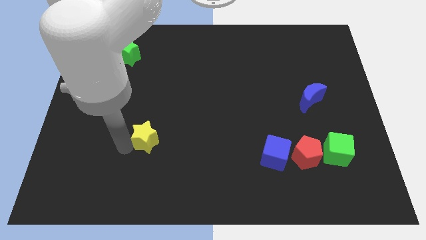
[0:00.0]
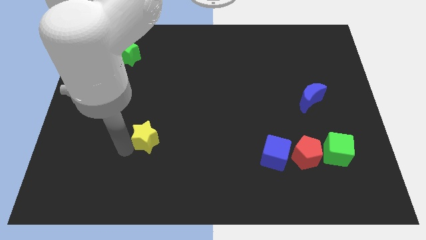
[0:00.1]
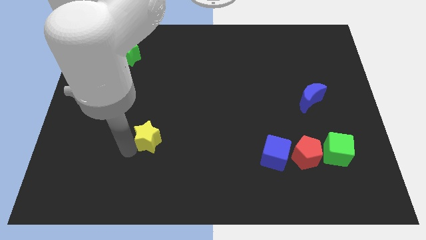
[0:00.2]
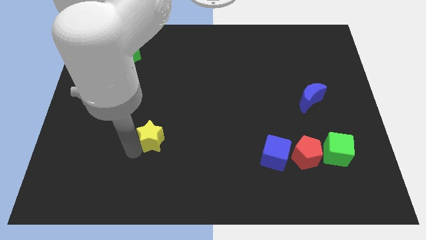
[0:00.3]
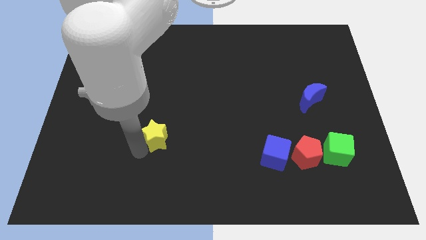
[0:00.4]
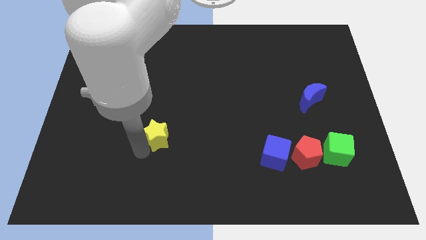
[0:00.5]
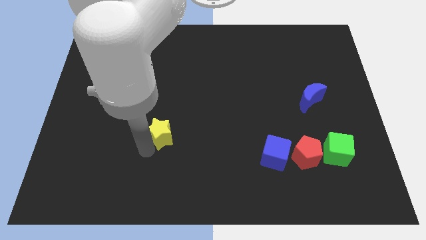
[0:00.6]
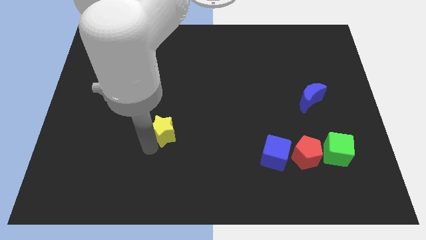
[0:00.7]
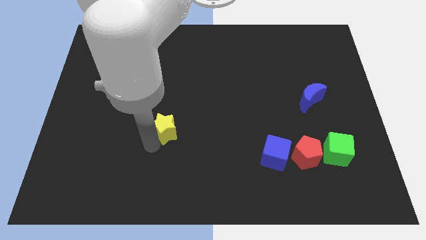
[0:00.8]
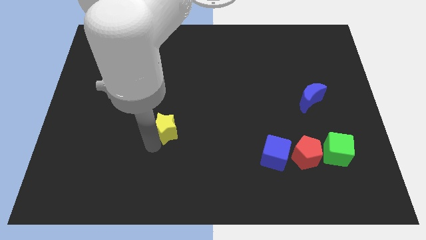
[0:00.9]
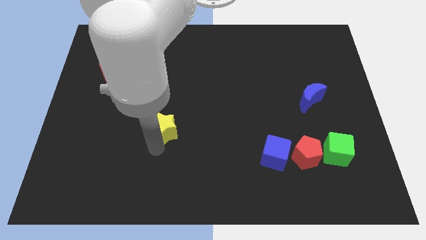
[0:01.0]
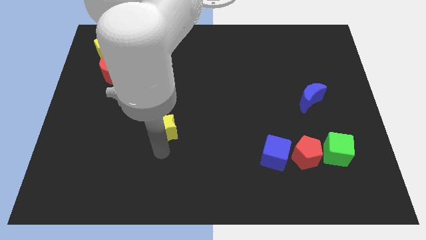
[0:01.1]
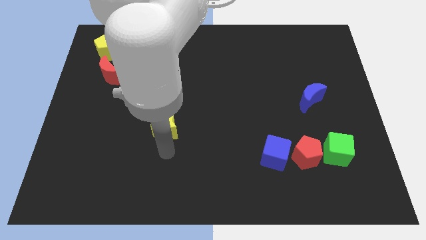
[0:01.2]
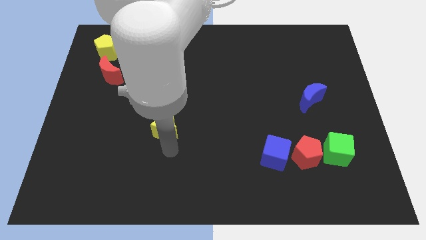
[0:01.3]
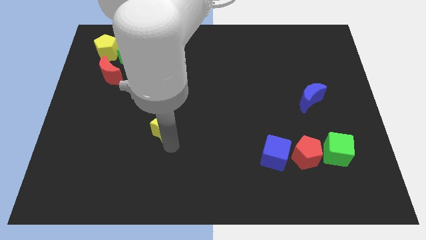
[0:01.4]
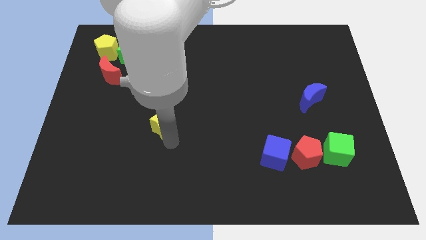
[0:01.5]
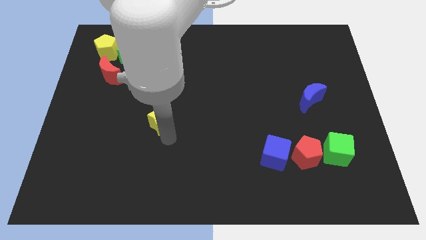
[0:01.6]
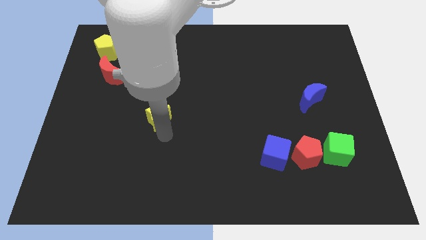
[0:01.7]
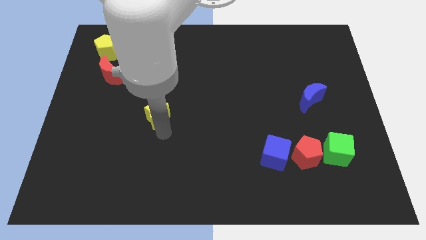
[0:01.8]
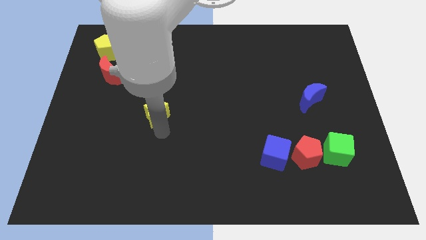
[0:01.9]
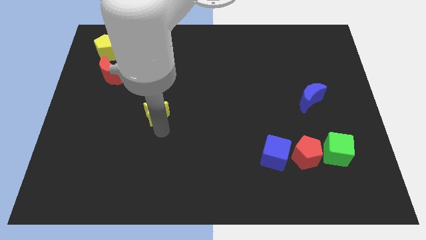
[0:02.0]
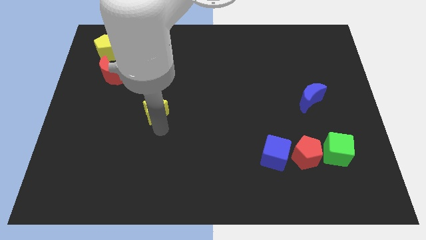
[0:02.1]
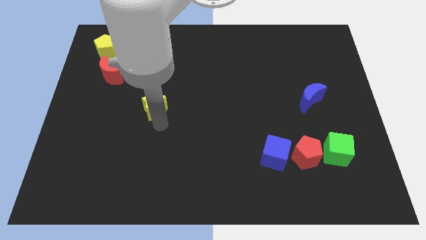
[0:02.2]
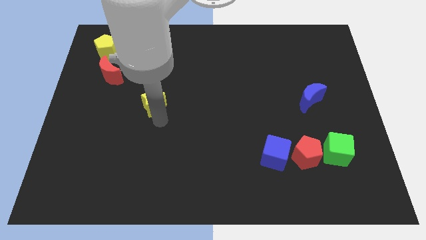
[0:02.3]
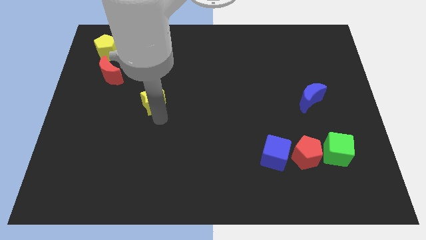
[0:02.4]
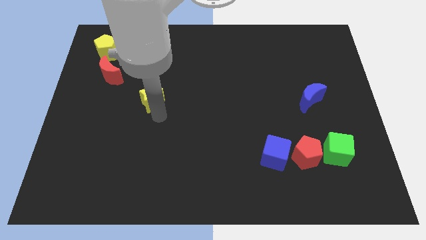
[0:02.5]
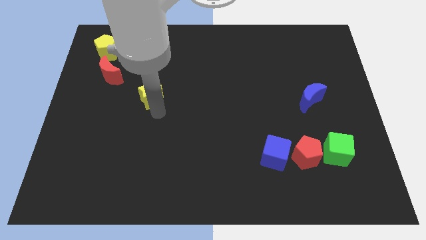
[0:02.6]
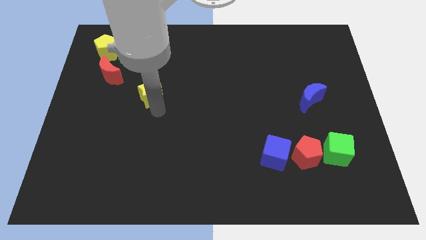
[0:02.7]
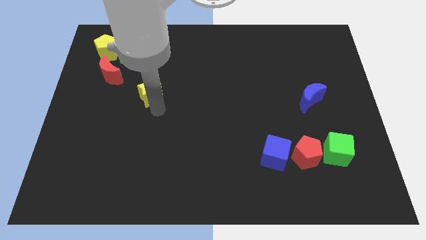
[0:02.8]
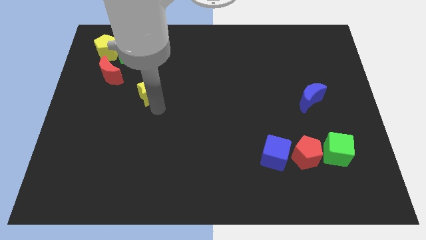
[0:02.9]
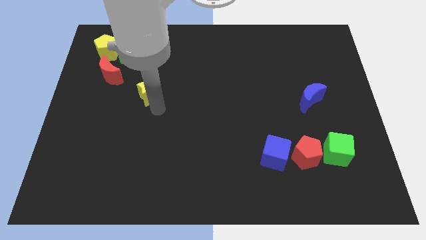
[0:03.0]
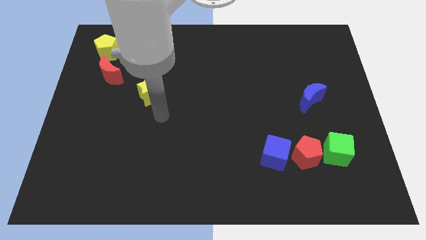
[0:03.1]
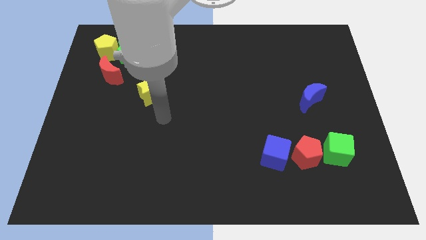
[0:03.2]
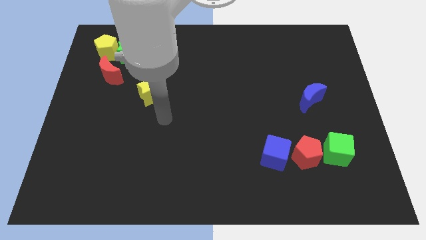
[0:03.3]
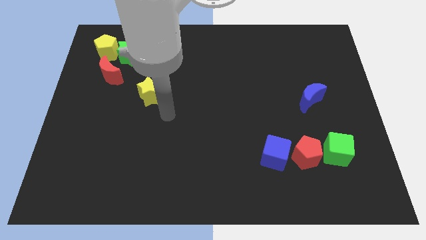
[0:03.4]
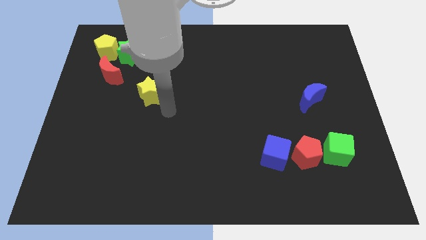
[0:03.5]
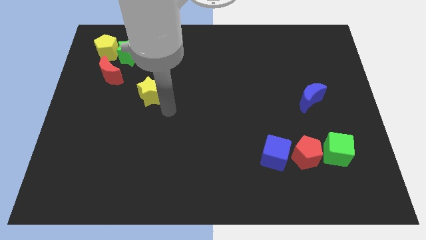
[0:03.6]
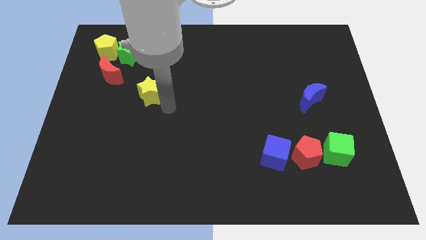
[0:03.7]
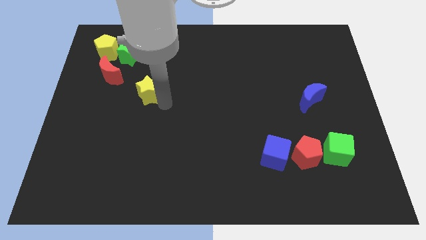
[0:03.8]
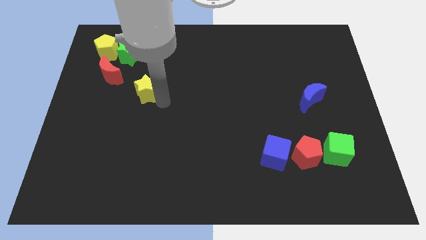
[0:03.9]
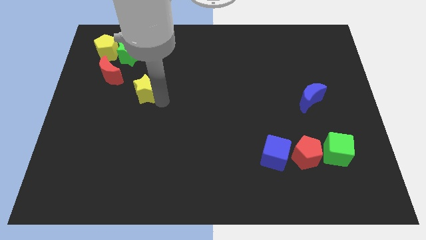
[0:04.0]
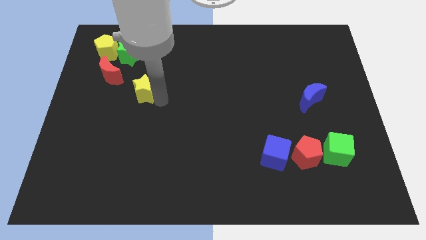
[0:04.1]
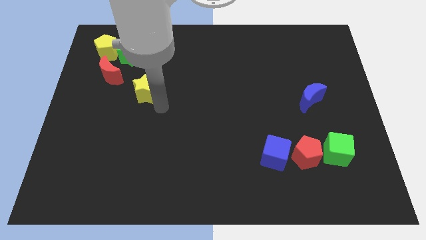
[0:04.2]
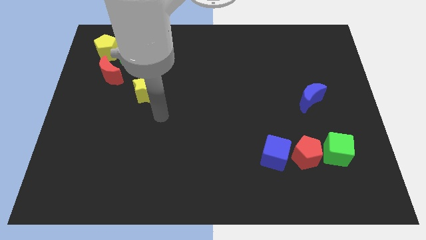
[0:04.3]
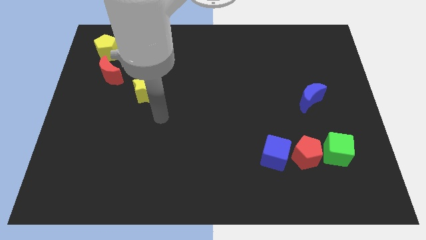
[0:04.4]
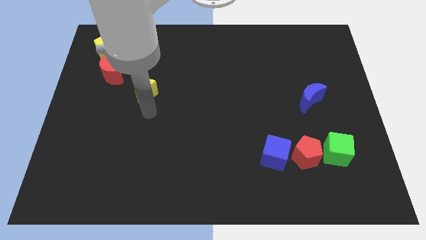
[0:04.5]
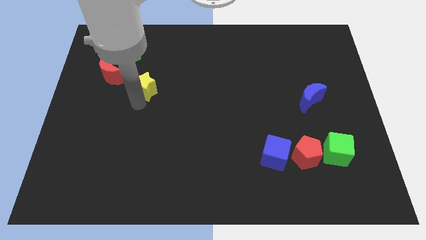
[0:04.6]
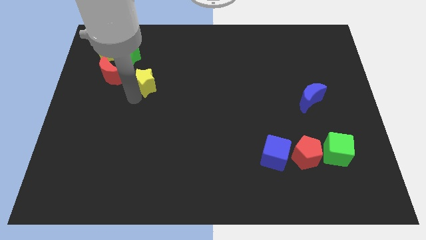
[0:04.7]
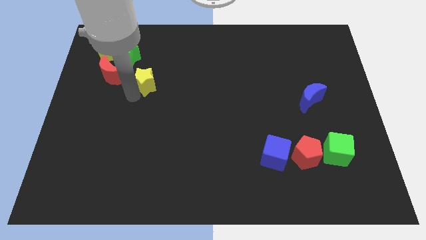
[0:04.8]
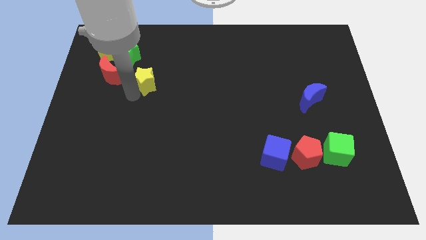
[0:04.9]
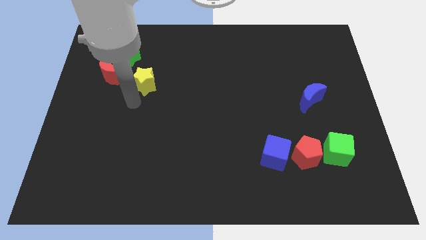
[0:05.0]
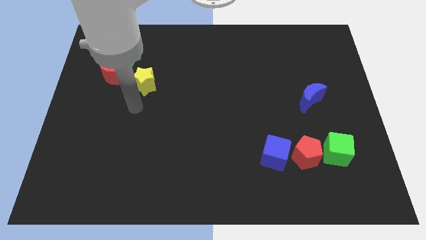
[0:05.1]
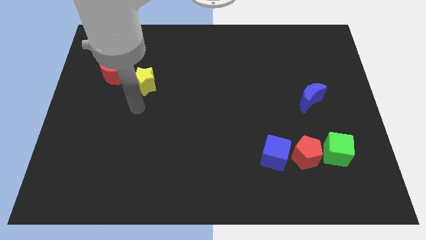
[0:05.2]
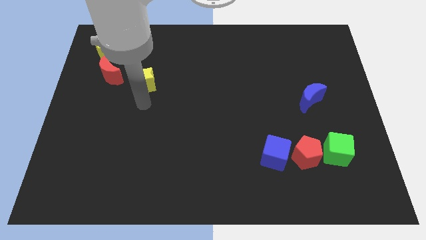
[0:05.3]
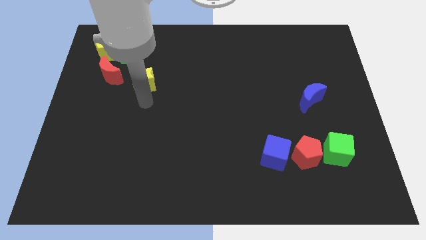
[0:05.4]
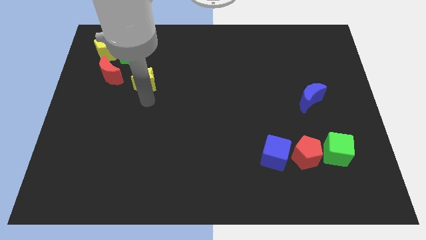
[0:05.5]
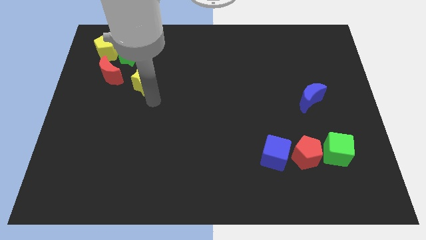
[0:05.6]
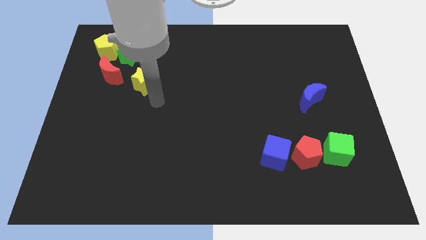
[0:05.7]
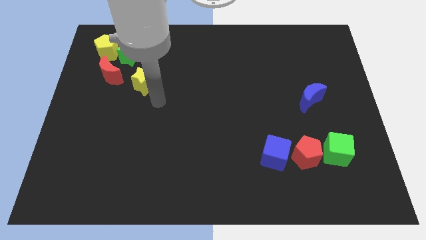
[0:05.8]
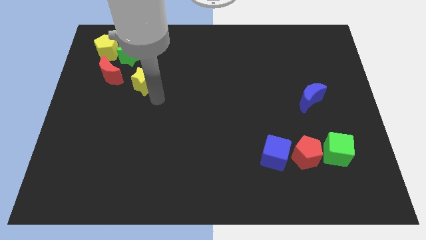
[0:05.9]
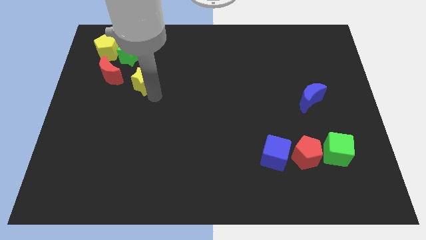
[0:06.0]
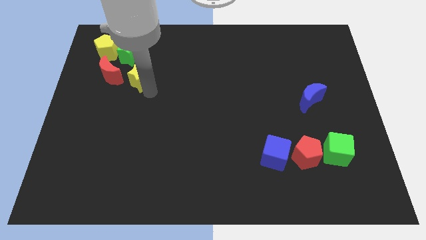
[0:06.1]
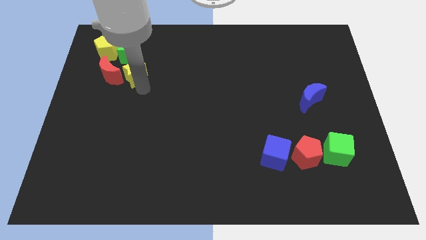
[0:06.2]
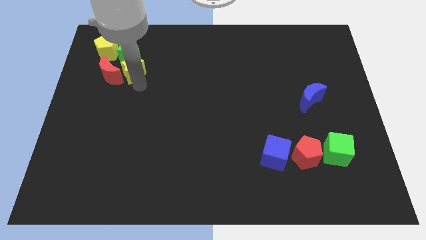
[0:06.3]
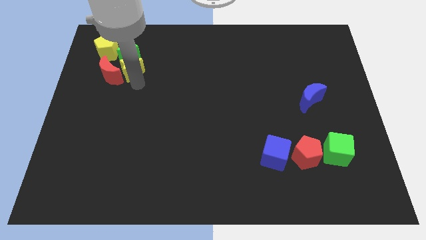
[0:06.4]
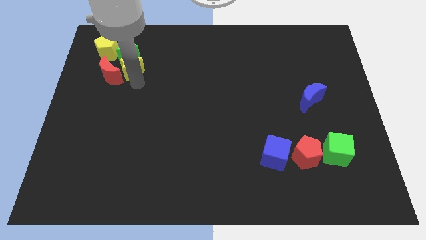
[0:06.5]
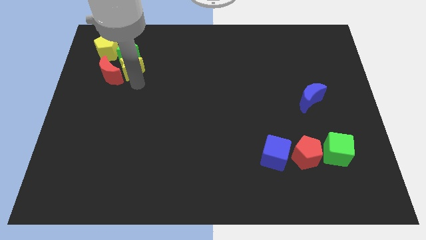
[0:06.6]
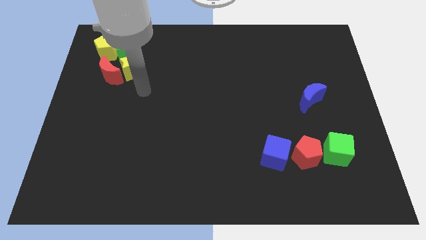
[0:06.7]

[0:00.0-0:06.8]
place the yellow star right to the red moon

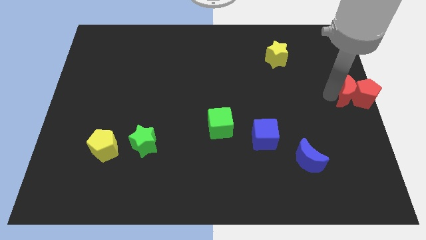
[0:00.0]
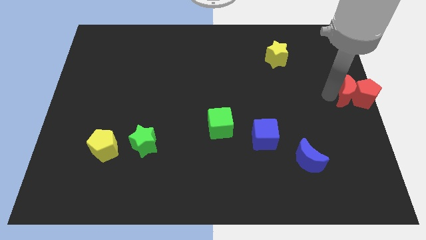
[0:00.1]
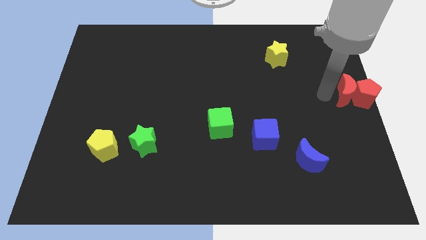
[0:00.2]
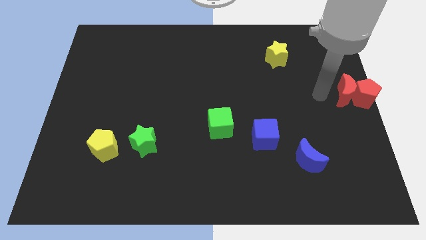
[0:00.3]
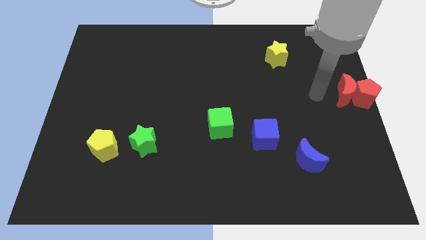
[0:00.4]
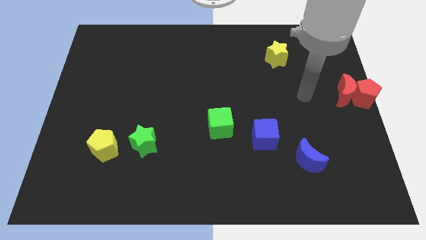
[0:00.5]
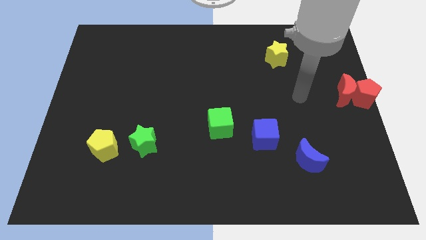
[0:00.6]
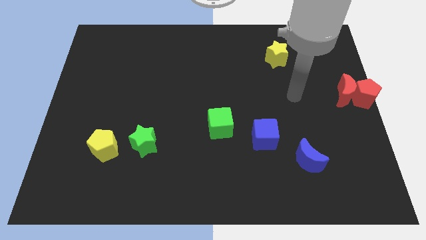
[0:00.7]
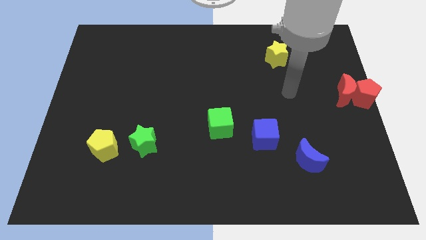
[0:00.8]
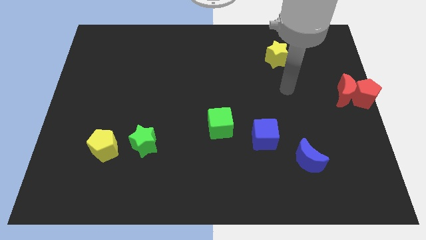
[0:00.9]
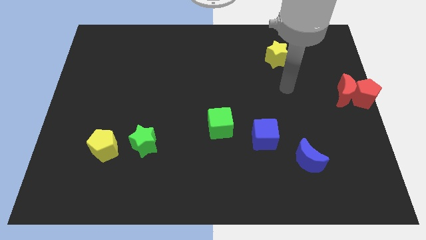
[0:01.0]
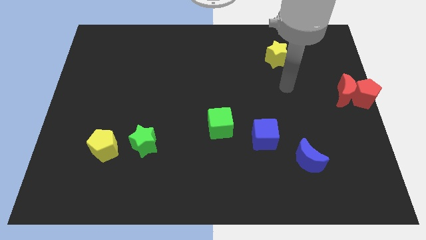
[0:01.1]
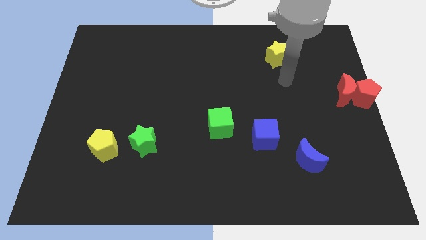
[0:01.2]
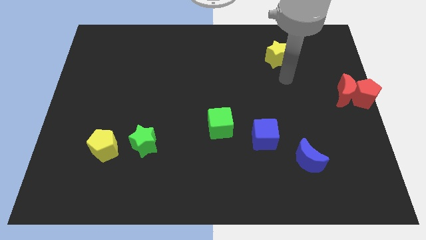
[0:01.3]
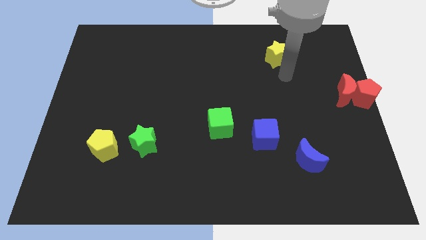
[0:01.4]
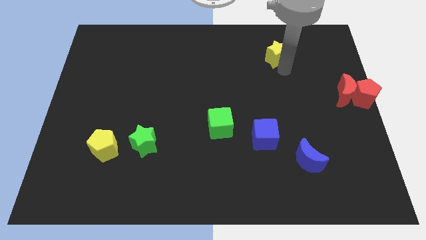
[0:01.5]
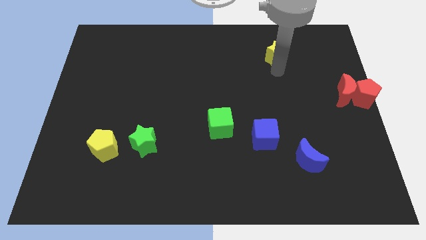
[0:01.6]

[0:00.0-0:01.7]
point your arm at the bottom of the yellow star

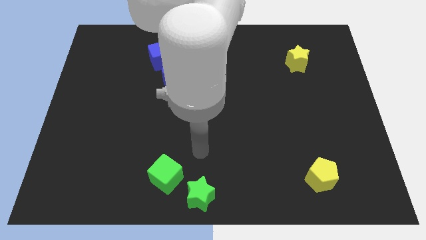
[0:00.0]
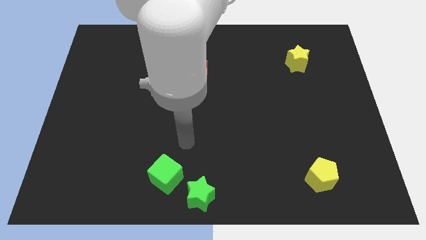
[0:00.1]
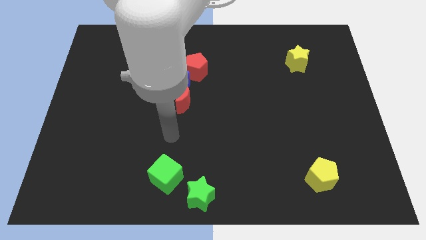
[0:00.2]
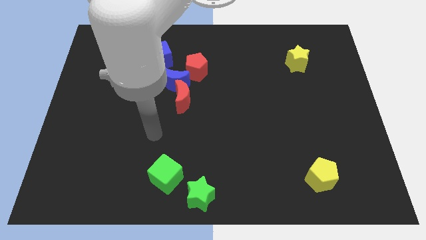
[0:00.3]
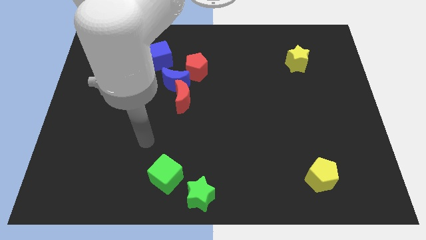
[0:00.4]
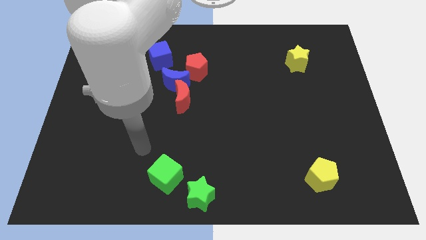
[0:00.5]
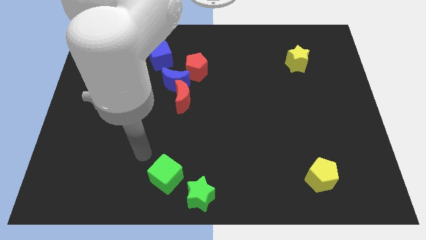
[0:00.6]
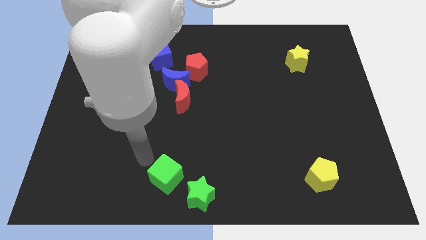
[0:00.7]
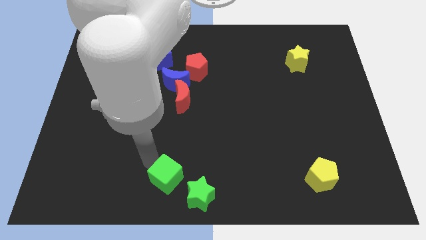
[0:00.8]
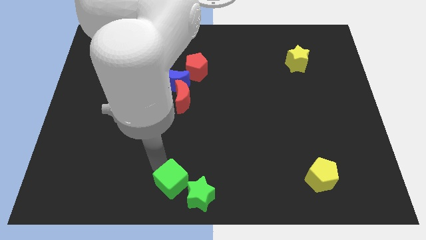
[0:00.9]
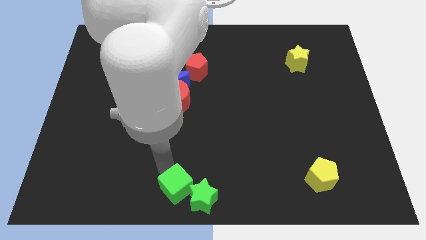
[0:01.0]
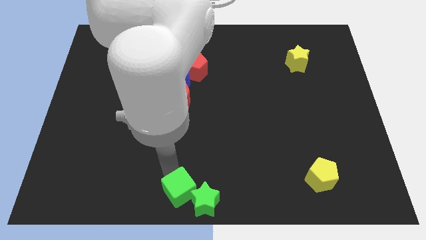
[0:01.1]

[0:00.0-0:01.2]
push the green cube into the green star
